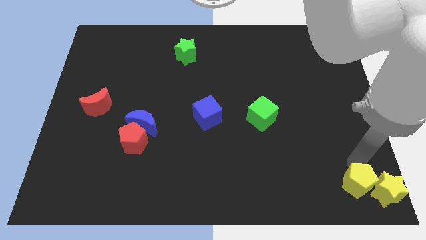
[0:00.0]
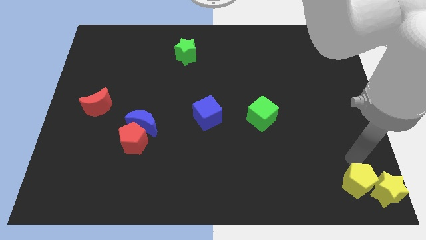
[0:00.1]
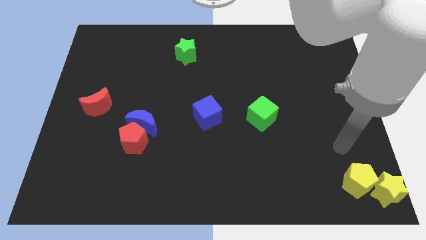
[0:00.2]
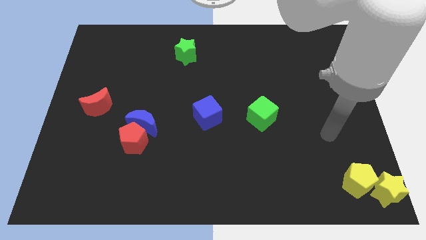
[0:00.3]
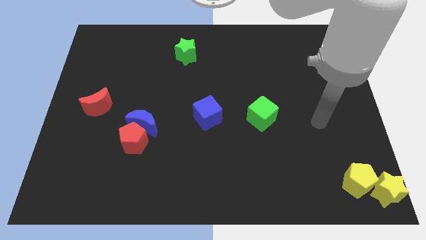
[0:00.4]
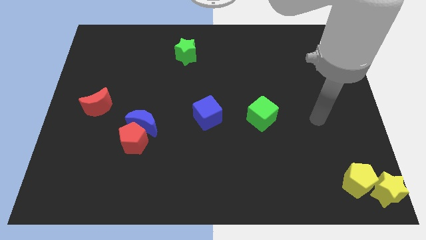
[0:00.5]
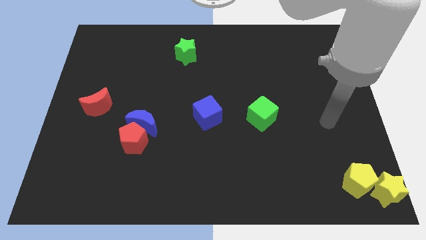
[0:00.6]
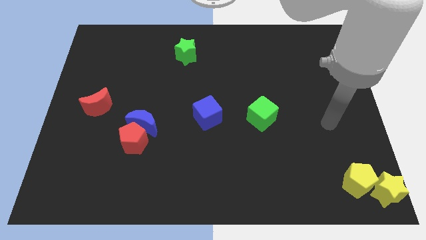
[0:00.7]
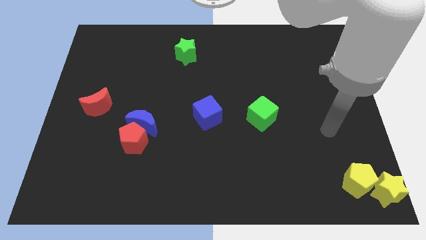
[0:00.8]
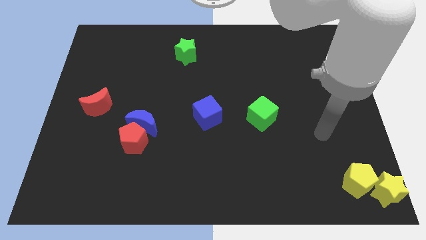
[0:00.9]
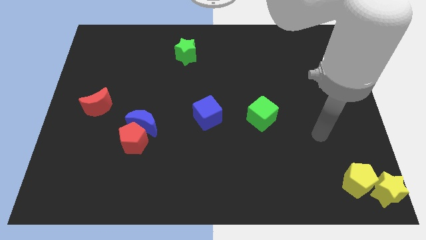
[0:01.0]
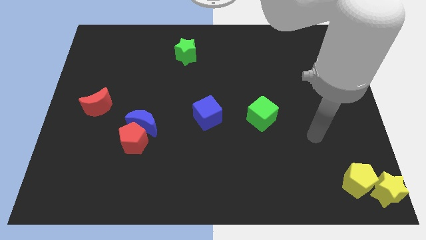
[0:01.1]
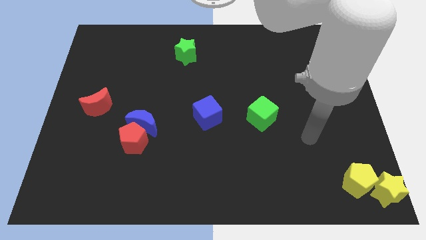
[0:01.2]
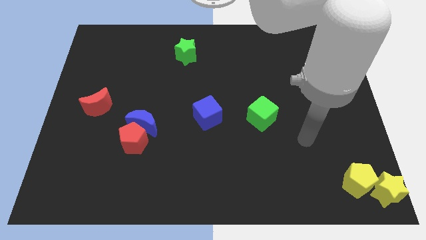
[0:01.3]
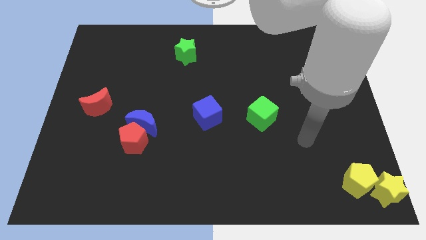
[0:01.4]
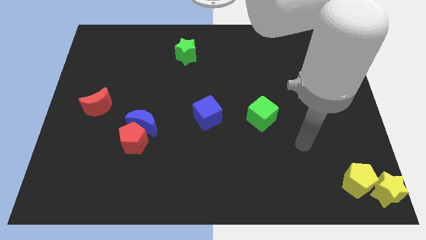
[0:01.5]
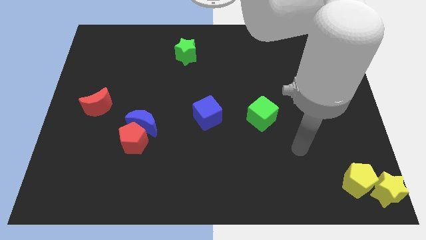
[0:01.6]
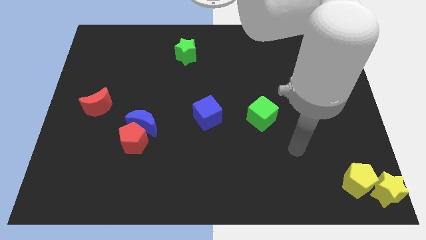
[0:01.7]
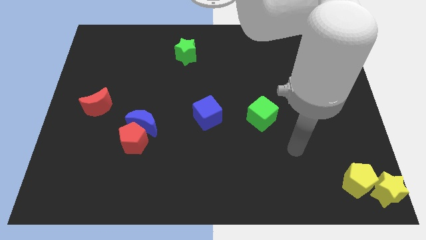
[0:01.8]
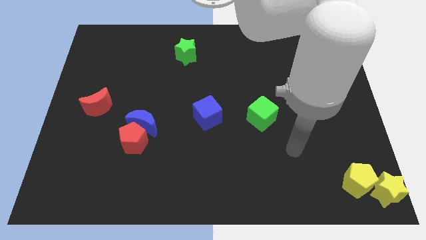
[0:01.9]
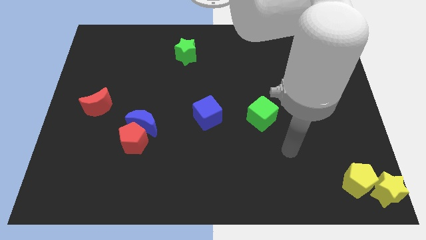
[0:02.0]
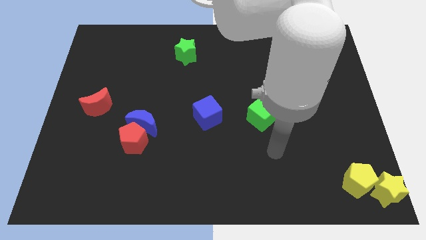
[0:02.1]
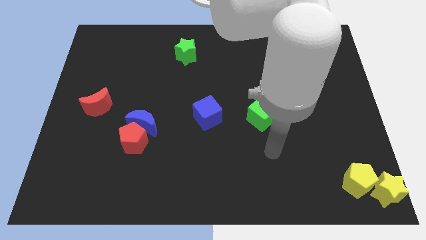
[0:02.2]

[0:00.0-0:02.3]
move your arm away from the yellow pentagon

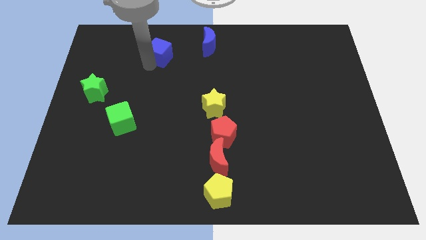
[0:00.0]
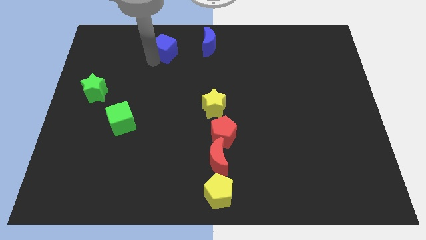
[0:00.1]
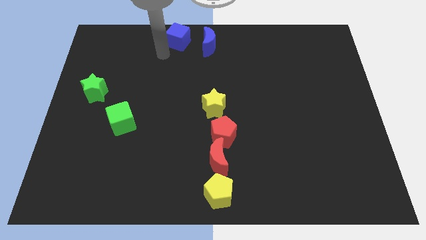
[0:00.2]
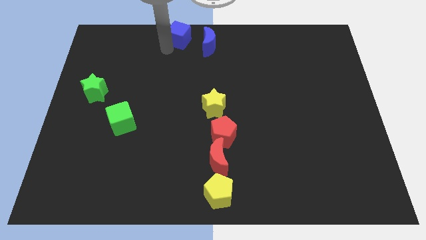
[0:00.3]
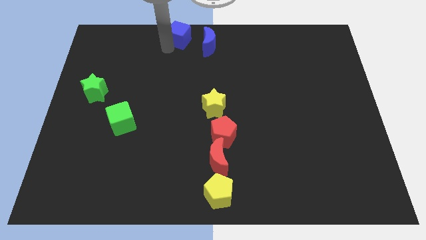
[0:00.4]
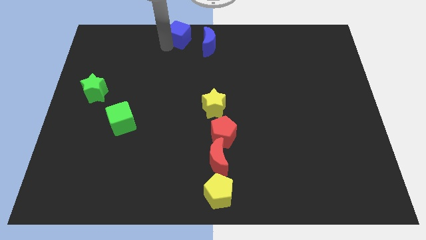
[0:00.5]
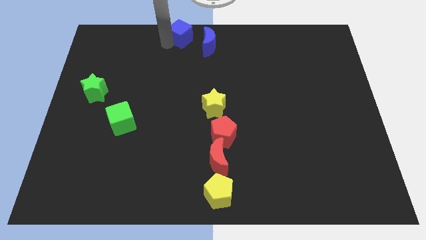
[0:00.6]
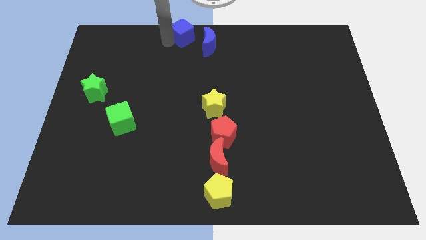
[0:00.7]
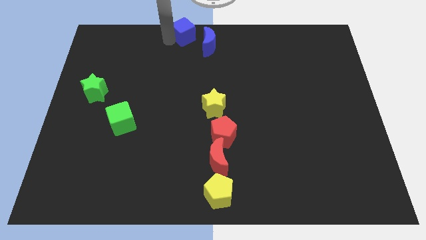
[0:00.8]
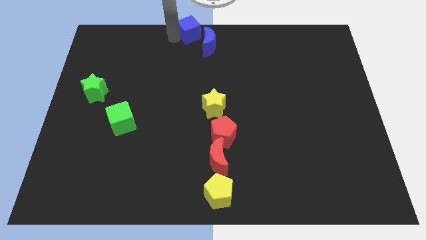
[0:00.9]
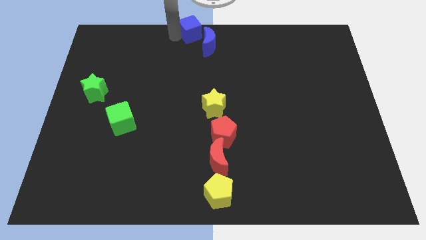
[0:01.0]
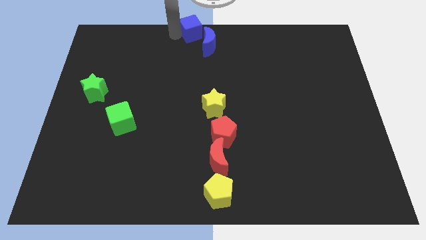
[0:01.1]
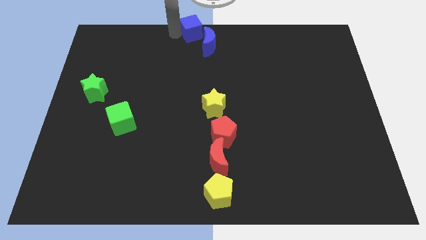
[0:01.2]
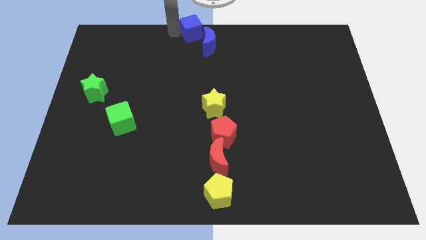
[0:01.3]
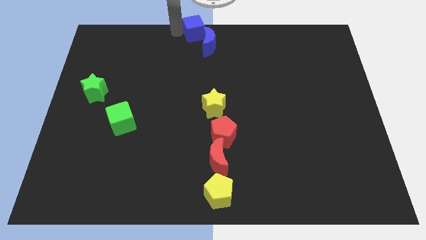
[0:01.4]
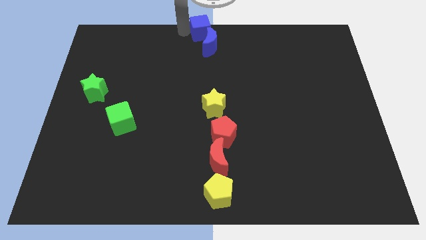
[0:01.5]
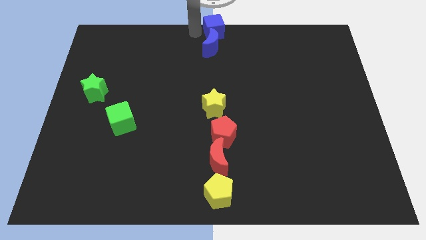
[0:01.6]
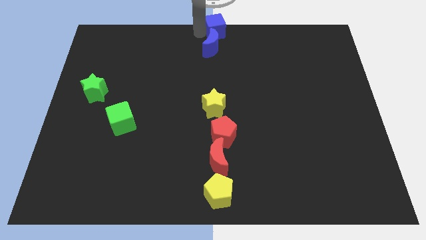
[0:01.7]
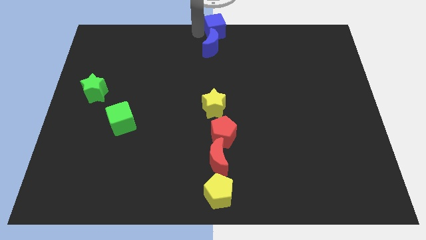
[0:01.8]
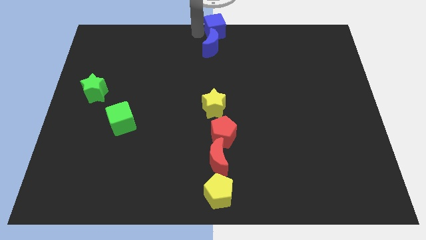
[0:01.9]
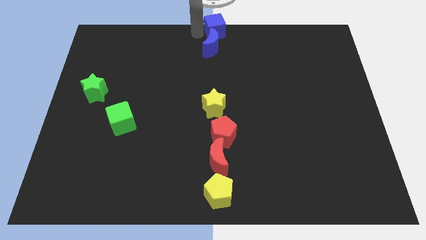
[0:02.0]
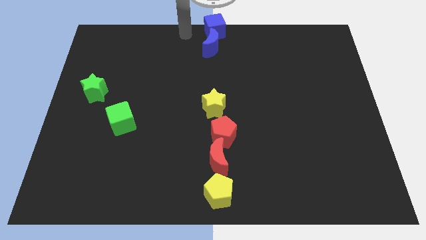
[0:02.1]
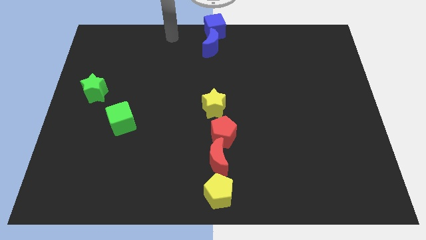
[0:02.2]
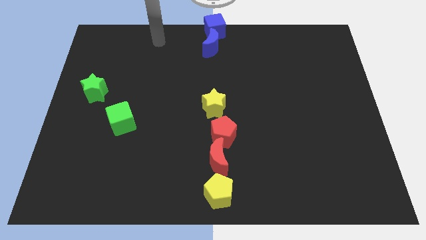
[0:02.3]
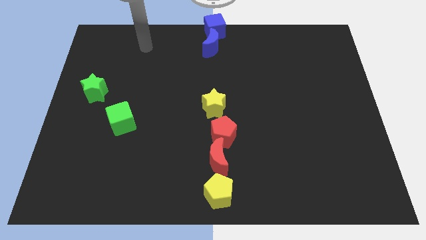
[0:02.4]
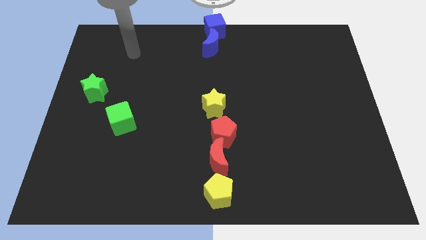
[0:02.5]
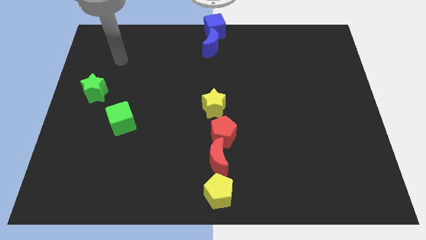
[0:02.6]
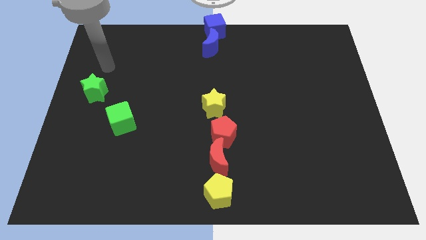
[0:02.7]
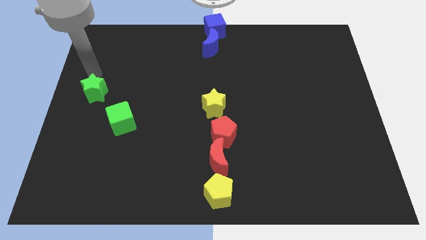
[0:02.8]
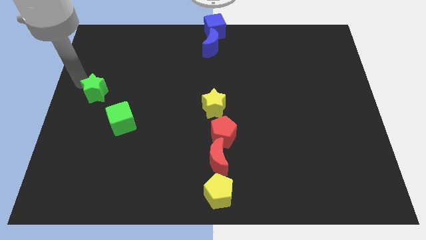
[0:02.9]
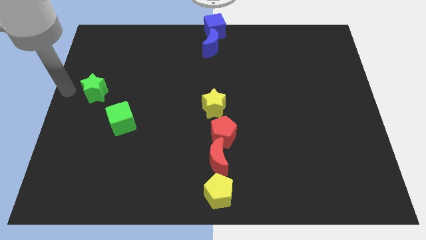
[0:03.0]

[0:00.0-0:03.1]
place blue cube above the blue moon

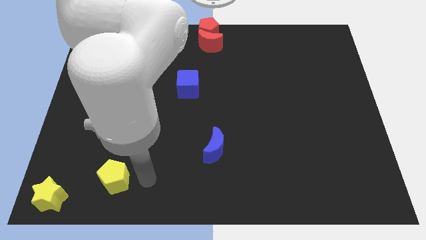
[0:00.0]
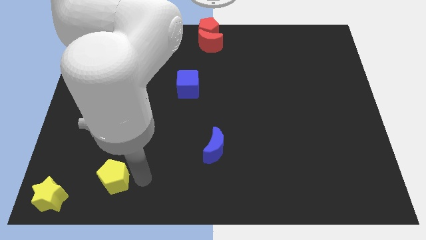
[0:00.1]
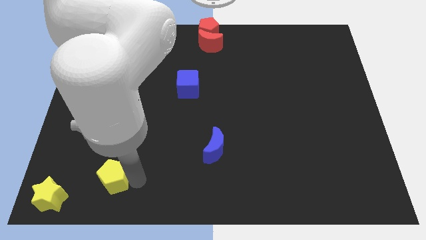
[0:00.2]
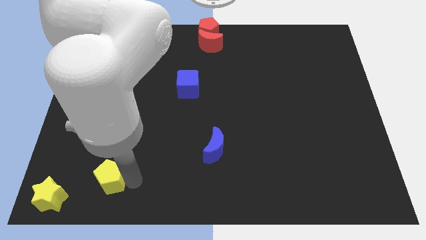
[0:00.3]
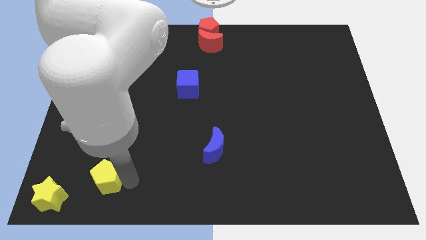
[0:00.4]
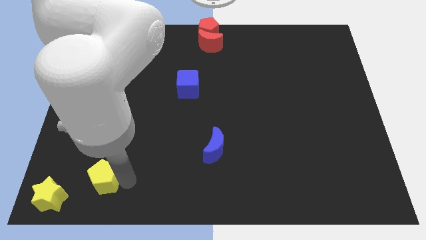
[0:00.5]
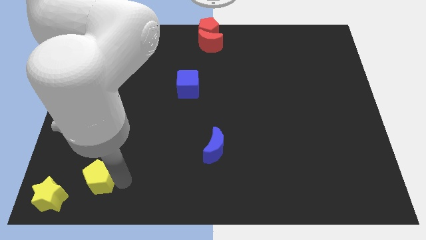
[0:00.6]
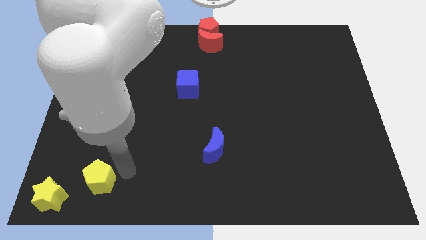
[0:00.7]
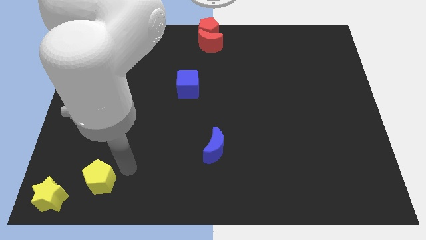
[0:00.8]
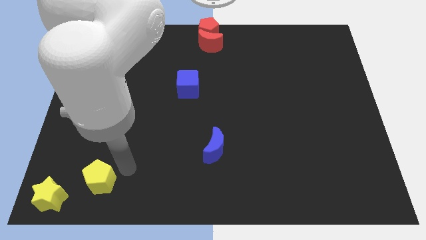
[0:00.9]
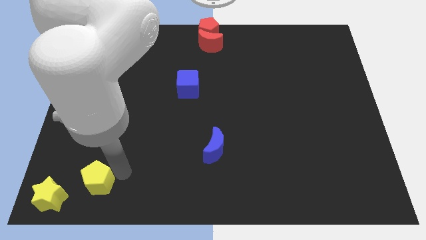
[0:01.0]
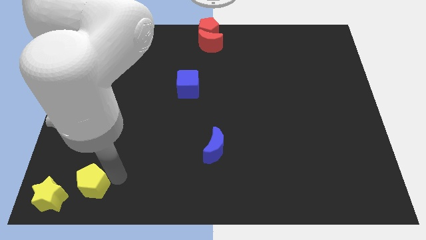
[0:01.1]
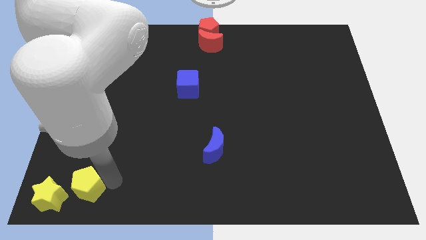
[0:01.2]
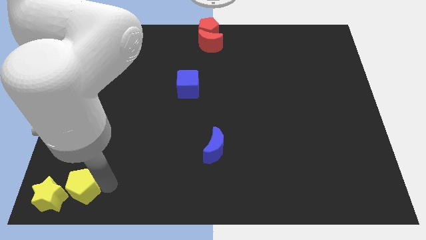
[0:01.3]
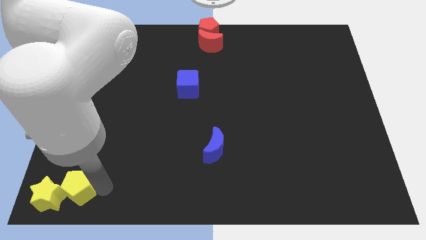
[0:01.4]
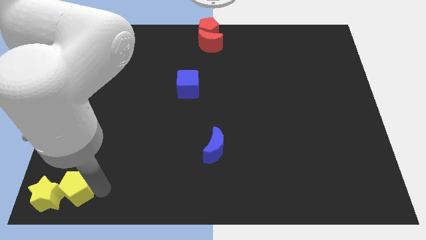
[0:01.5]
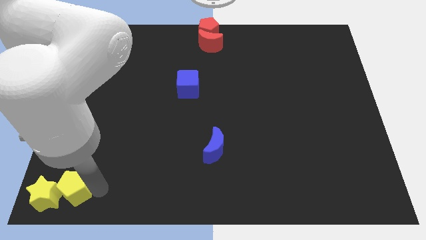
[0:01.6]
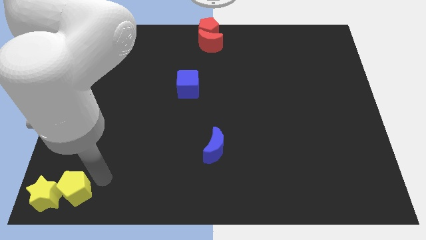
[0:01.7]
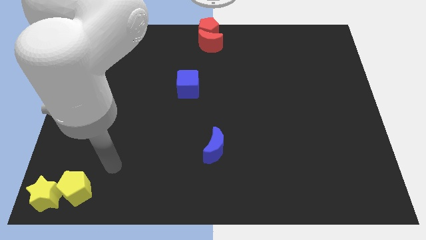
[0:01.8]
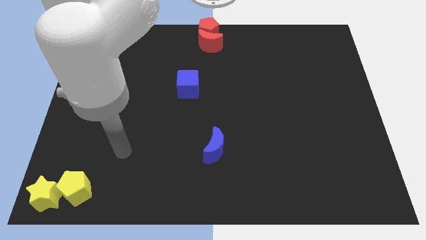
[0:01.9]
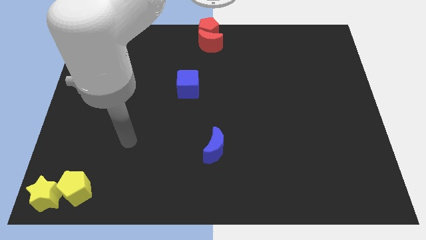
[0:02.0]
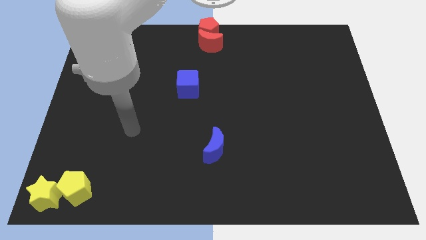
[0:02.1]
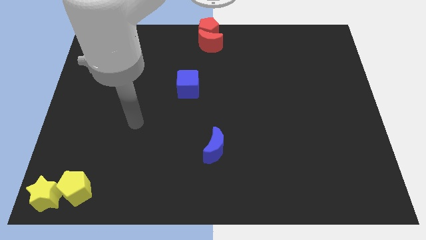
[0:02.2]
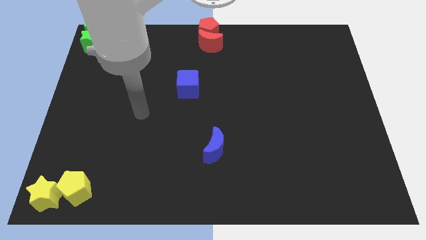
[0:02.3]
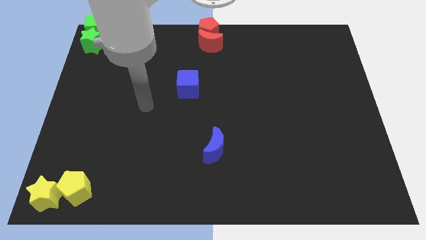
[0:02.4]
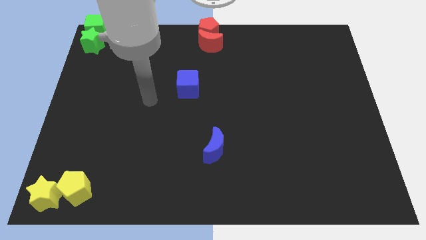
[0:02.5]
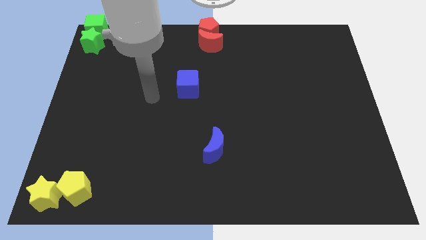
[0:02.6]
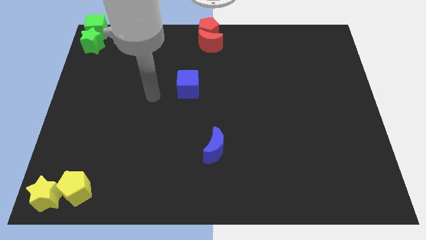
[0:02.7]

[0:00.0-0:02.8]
push the yellow pentagon into the yellow star

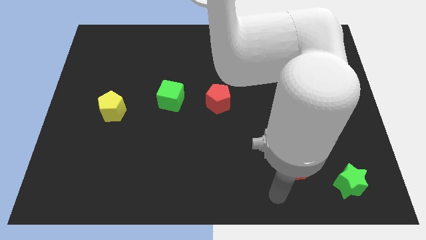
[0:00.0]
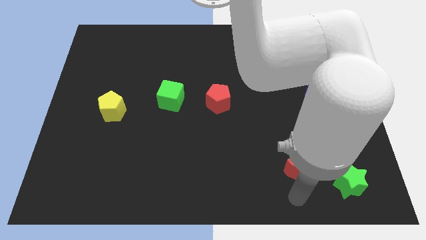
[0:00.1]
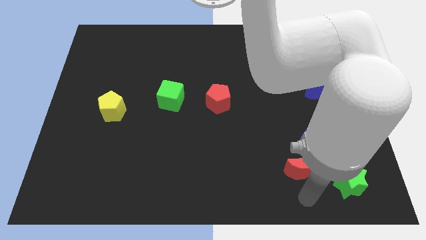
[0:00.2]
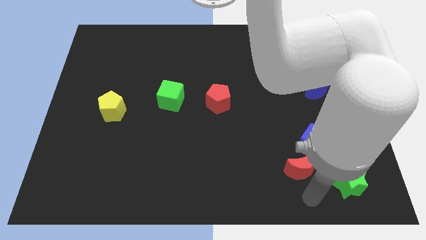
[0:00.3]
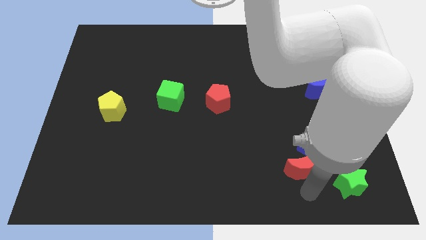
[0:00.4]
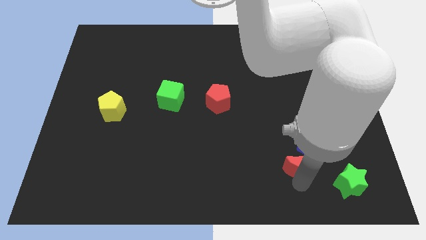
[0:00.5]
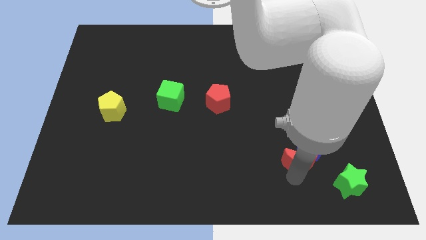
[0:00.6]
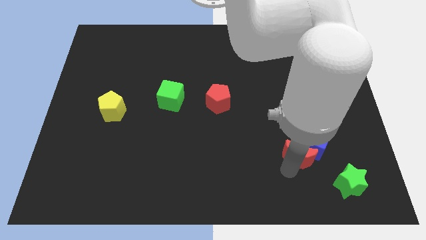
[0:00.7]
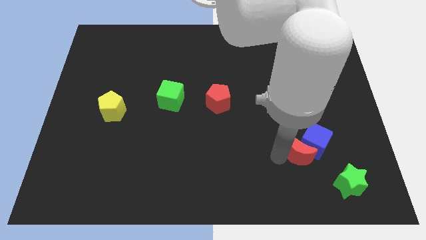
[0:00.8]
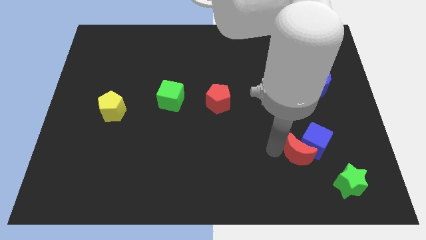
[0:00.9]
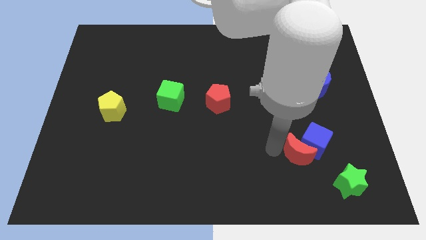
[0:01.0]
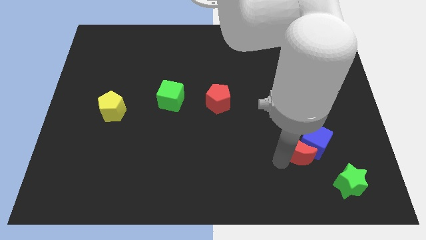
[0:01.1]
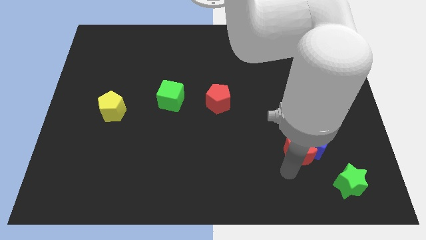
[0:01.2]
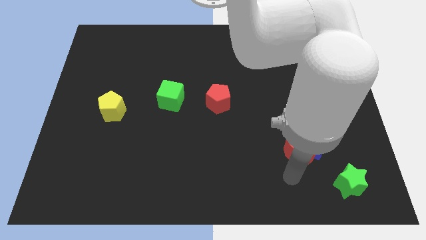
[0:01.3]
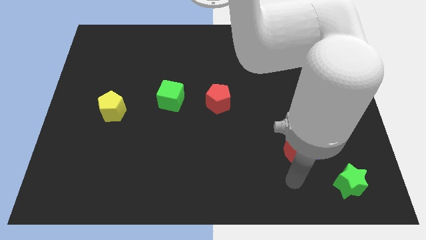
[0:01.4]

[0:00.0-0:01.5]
push the red moon into the blue cube
